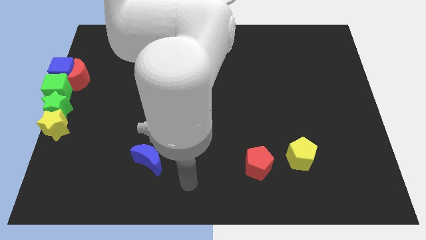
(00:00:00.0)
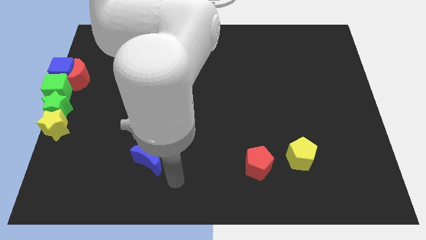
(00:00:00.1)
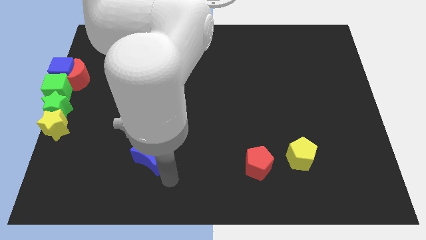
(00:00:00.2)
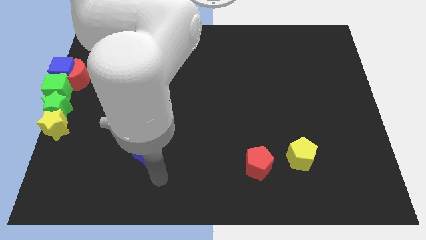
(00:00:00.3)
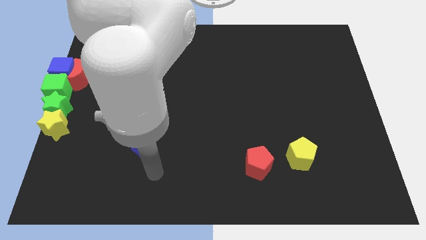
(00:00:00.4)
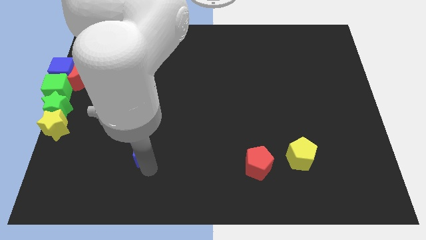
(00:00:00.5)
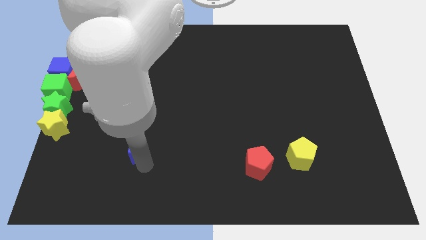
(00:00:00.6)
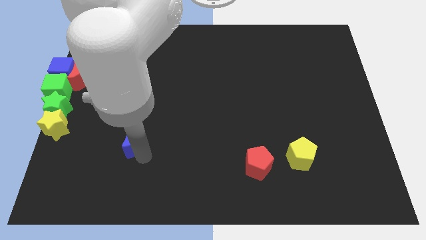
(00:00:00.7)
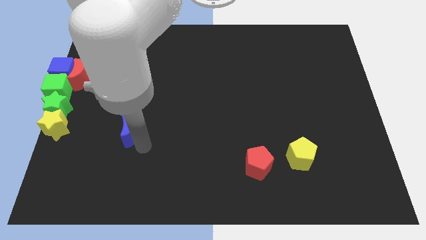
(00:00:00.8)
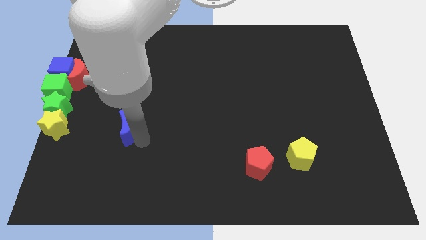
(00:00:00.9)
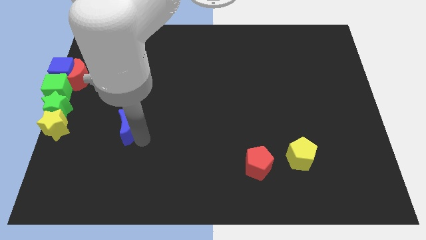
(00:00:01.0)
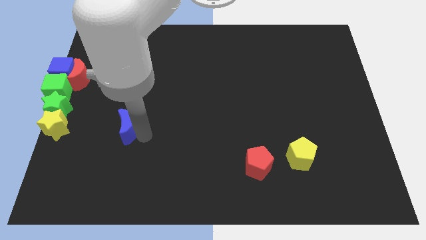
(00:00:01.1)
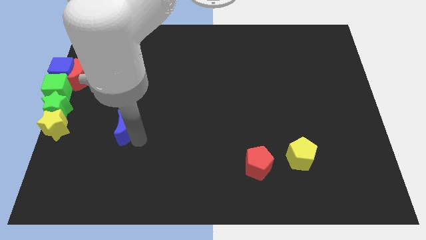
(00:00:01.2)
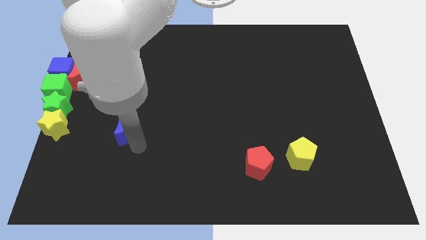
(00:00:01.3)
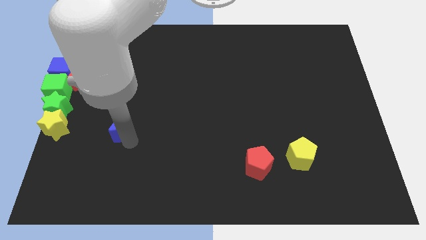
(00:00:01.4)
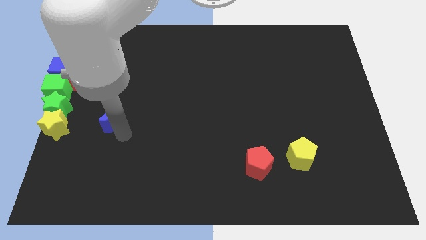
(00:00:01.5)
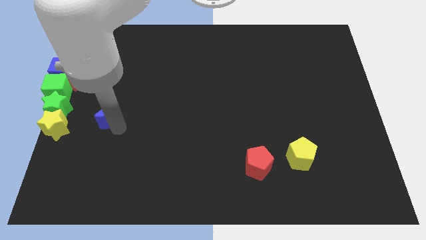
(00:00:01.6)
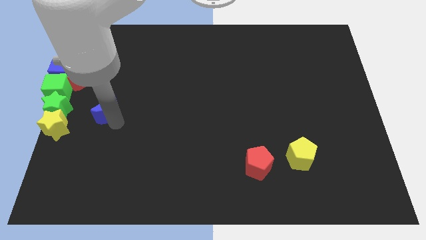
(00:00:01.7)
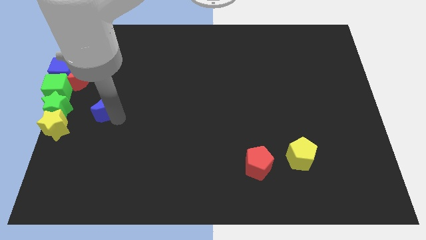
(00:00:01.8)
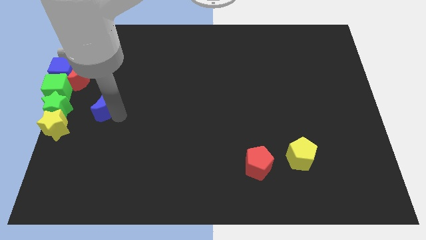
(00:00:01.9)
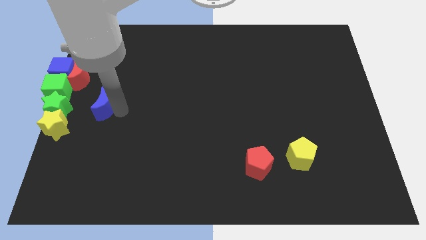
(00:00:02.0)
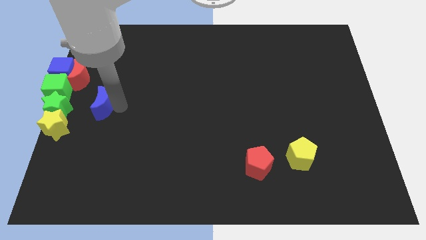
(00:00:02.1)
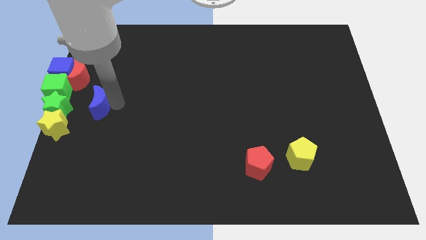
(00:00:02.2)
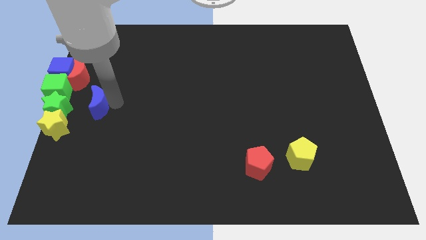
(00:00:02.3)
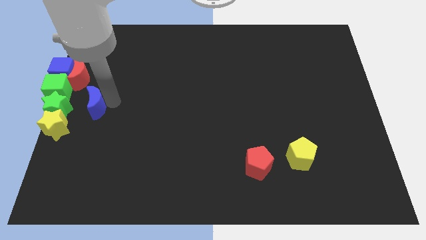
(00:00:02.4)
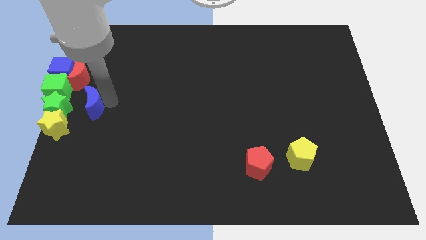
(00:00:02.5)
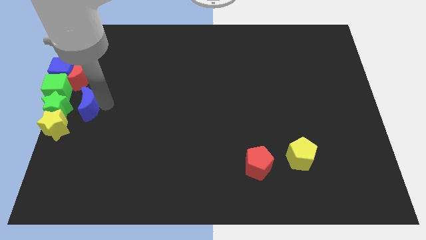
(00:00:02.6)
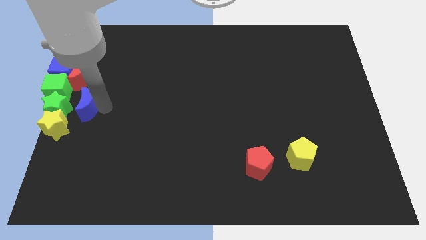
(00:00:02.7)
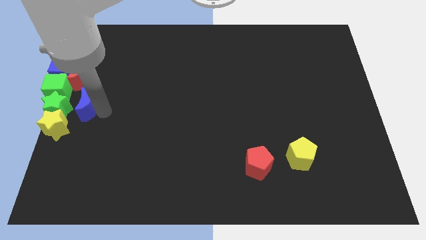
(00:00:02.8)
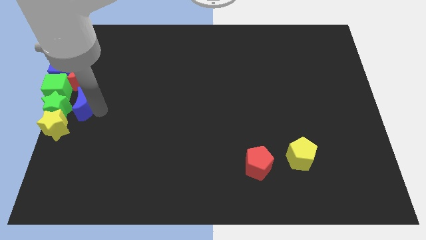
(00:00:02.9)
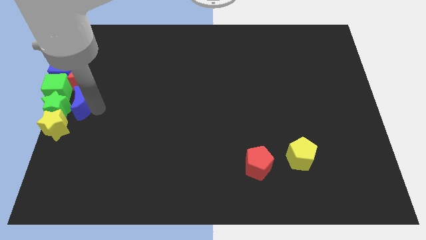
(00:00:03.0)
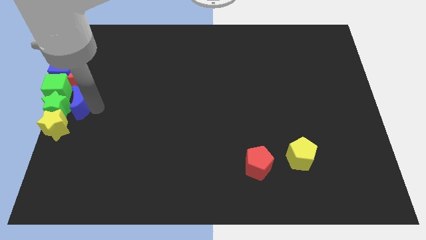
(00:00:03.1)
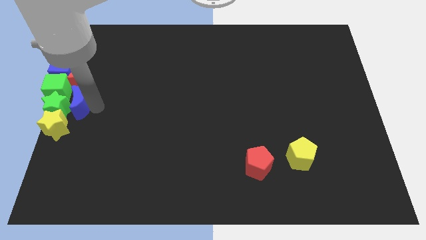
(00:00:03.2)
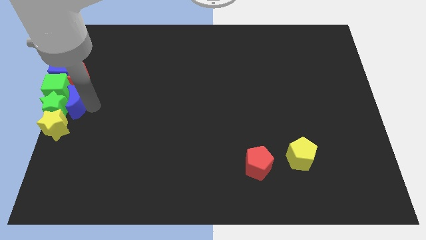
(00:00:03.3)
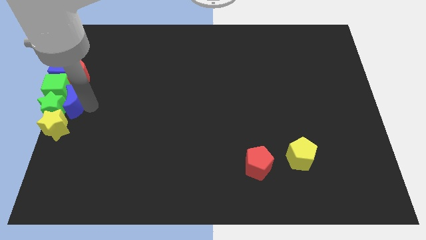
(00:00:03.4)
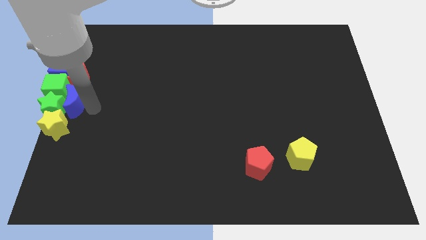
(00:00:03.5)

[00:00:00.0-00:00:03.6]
move the blue moon into the green star and green cube to the right

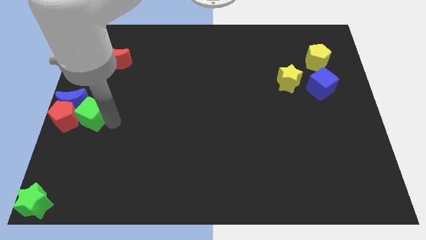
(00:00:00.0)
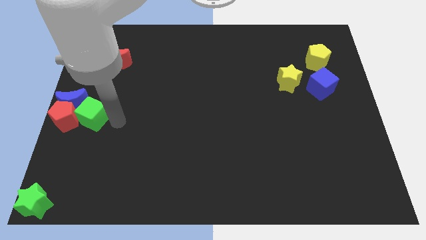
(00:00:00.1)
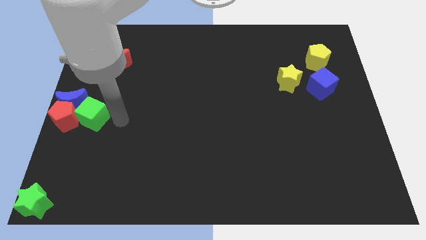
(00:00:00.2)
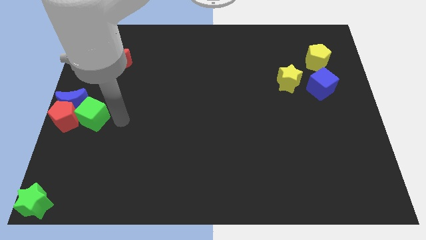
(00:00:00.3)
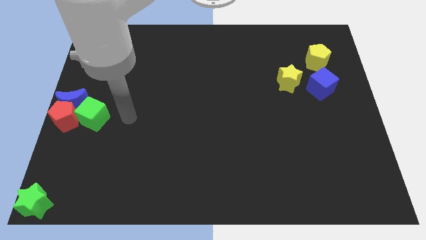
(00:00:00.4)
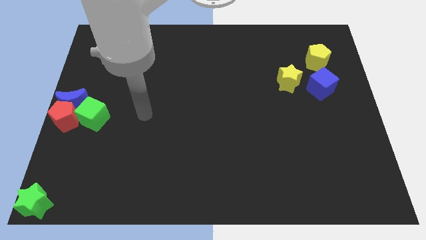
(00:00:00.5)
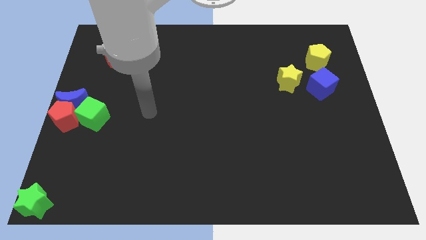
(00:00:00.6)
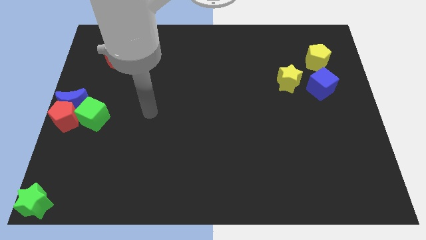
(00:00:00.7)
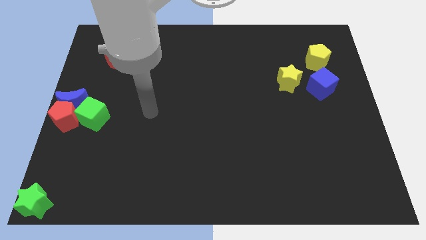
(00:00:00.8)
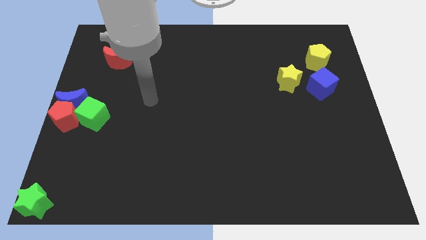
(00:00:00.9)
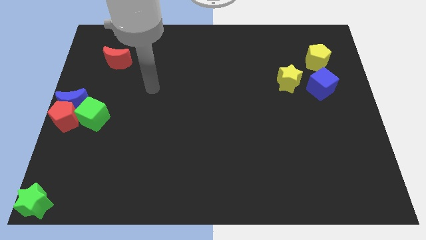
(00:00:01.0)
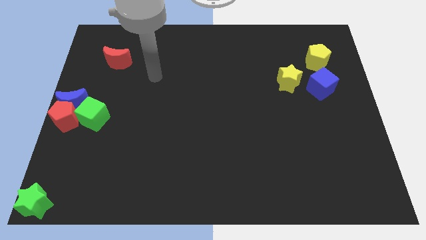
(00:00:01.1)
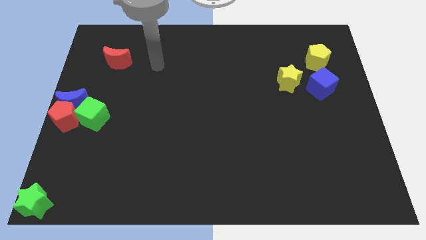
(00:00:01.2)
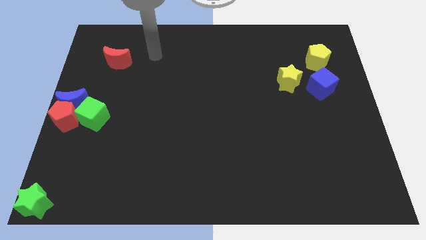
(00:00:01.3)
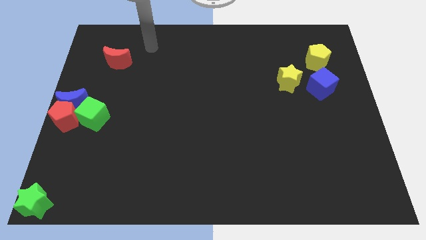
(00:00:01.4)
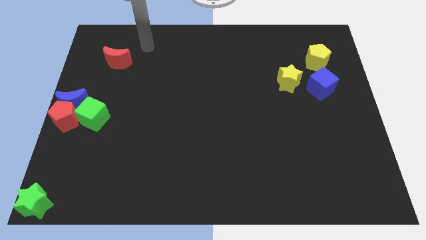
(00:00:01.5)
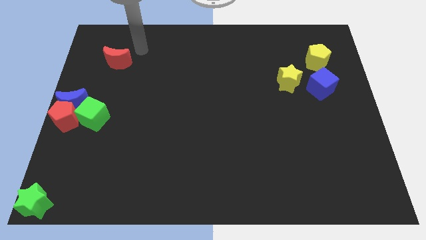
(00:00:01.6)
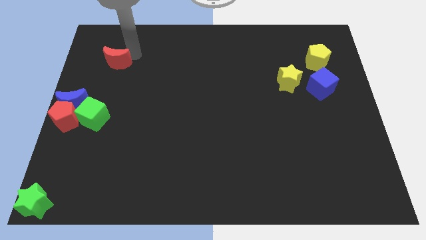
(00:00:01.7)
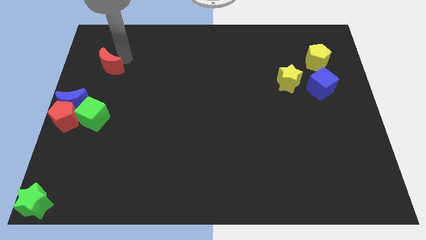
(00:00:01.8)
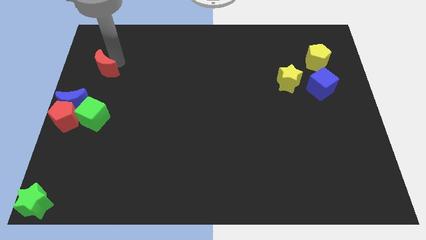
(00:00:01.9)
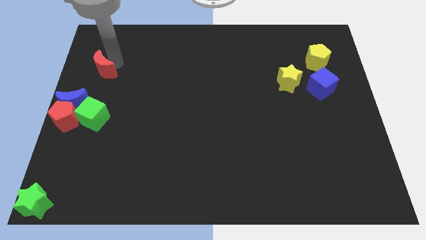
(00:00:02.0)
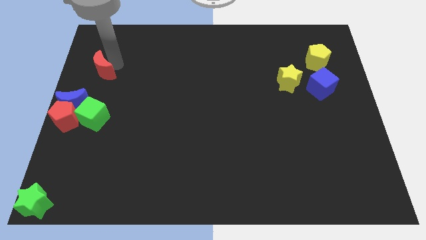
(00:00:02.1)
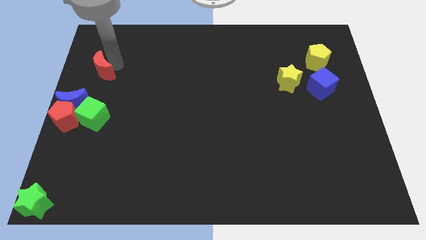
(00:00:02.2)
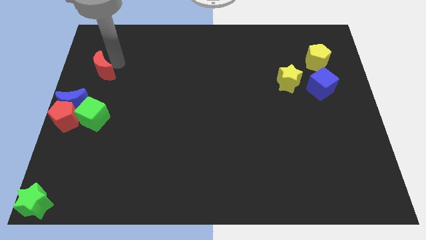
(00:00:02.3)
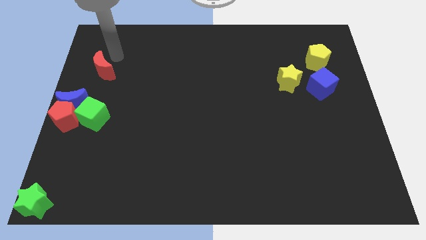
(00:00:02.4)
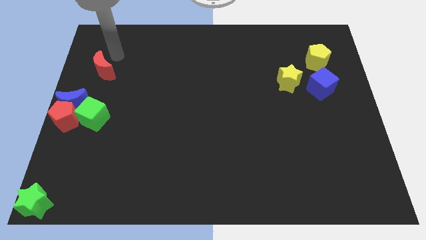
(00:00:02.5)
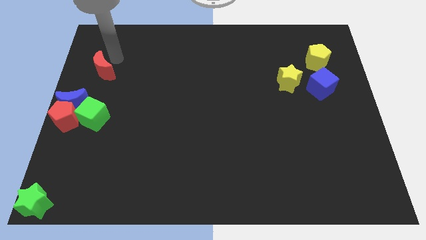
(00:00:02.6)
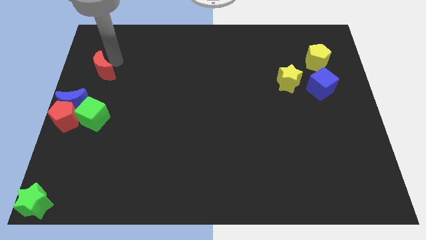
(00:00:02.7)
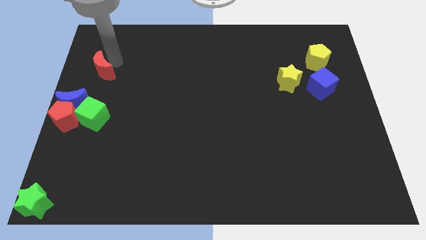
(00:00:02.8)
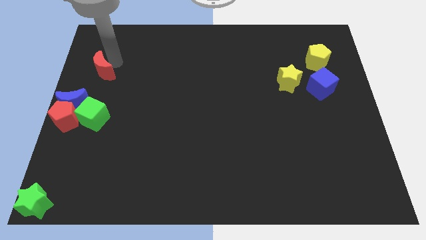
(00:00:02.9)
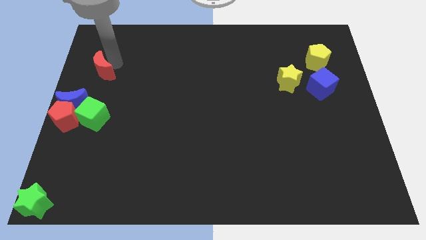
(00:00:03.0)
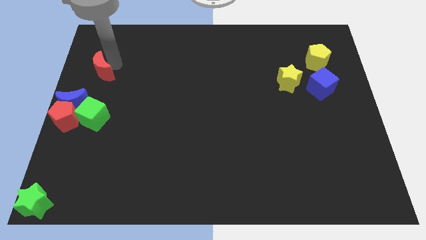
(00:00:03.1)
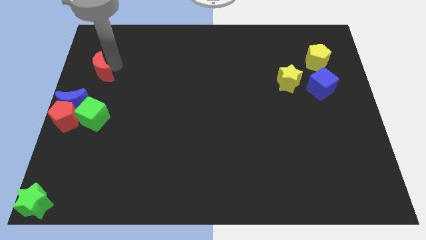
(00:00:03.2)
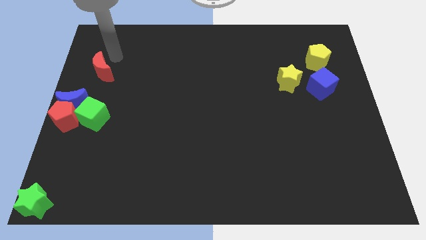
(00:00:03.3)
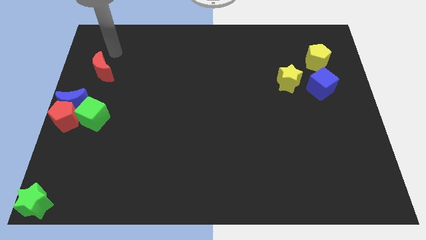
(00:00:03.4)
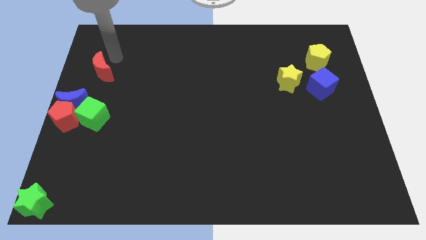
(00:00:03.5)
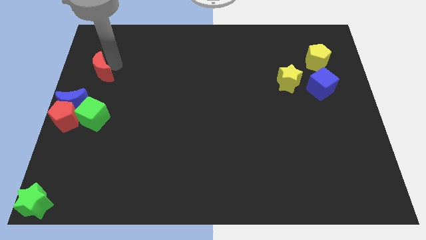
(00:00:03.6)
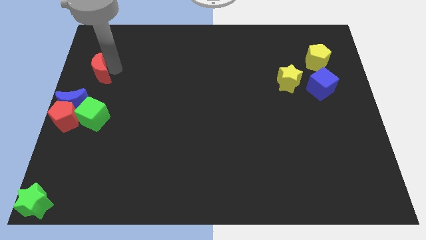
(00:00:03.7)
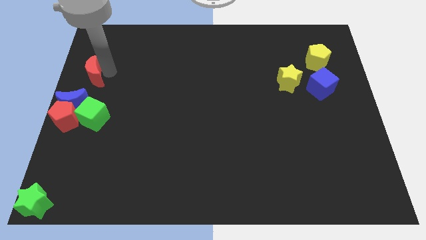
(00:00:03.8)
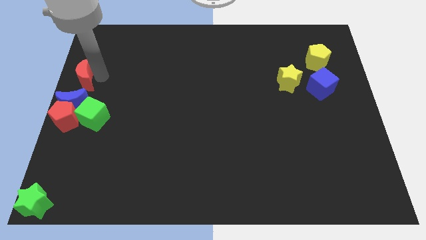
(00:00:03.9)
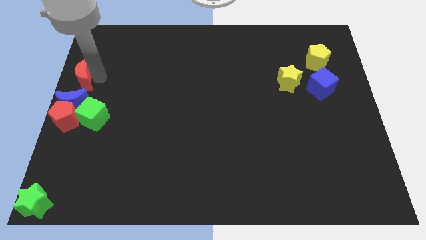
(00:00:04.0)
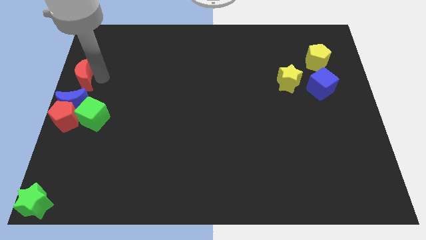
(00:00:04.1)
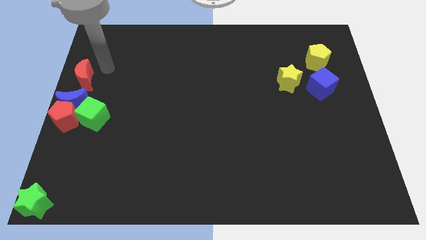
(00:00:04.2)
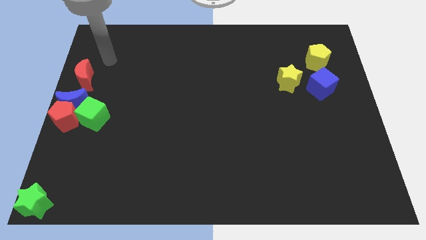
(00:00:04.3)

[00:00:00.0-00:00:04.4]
move the red moon to the top right side of the blue moon

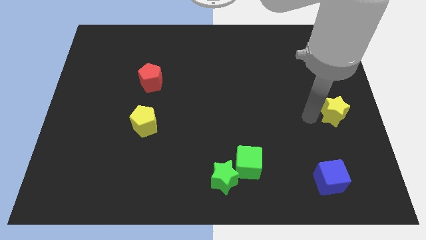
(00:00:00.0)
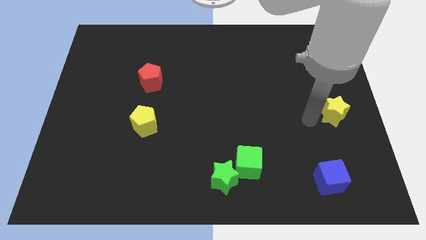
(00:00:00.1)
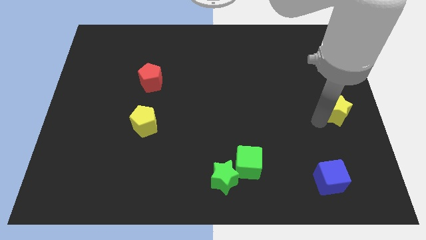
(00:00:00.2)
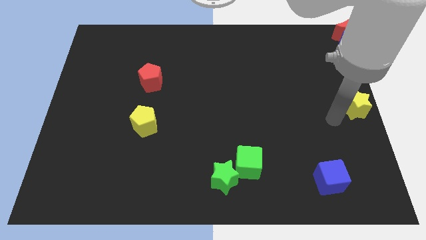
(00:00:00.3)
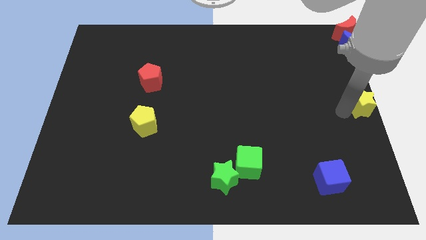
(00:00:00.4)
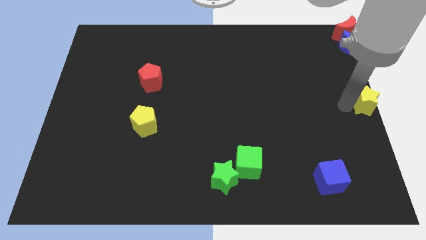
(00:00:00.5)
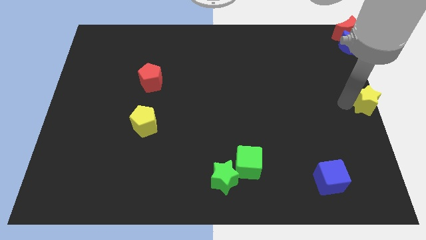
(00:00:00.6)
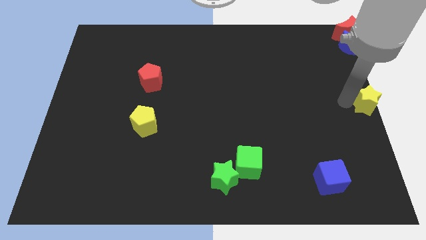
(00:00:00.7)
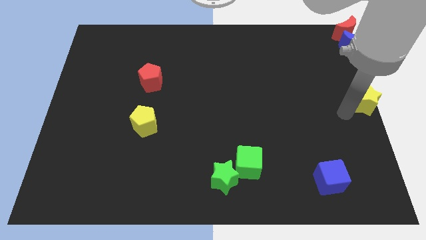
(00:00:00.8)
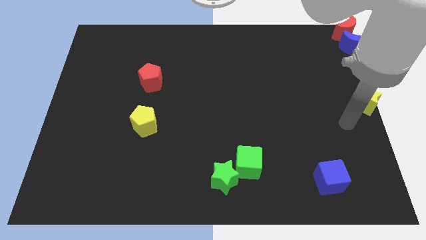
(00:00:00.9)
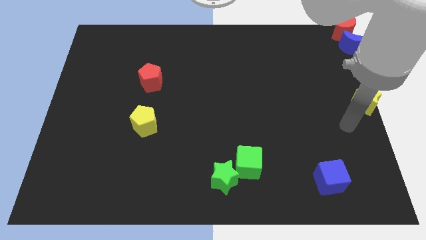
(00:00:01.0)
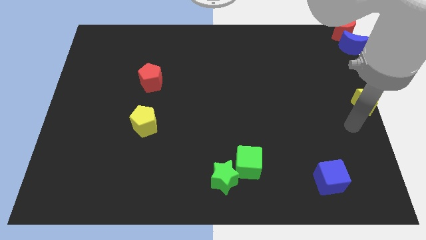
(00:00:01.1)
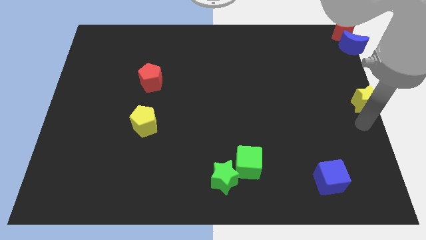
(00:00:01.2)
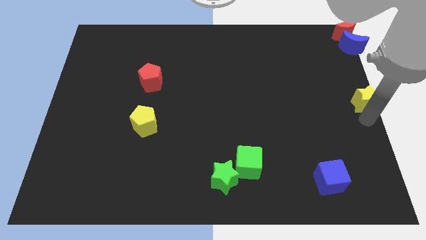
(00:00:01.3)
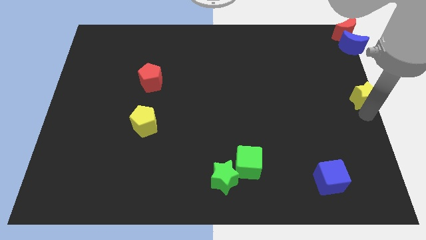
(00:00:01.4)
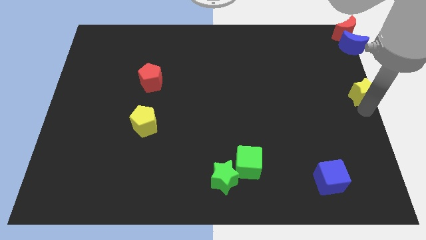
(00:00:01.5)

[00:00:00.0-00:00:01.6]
push yellow star to the right center of the board
